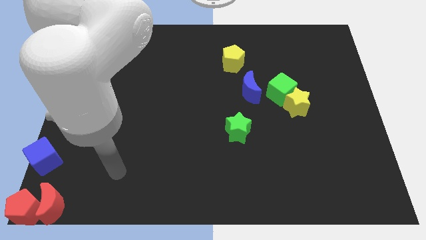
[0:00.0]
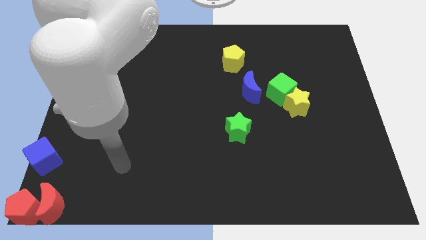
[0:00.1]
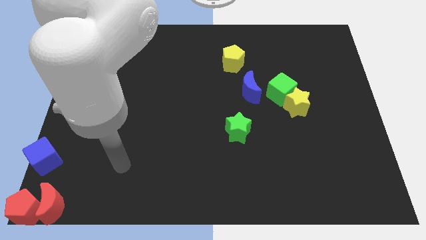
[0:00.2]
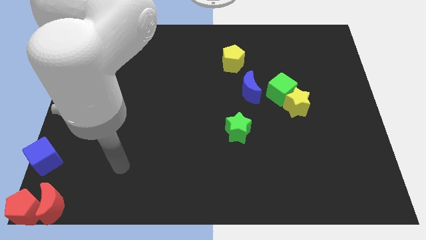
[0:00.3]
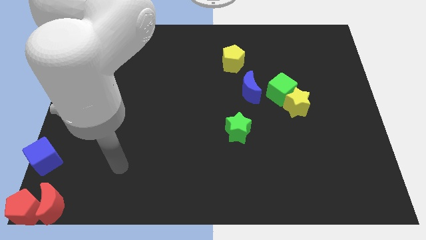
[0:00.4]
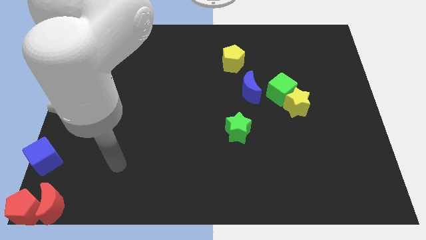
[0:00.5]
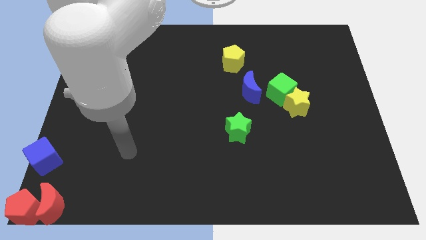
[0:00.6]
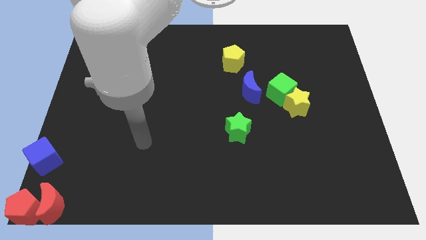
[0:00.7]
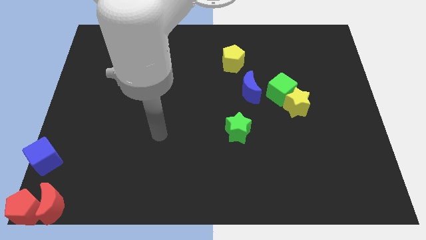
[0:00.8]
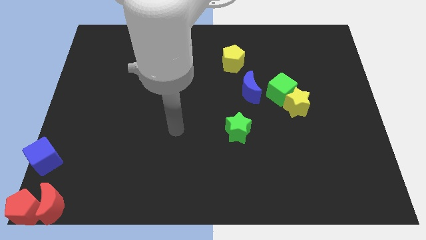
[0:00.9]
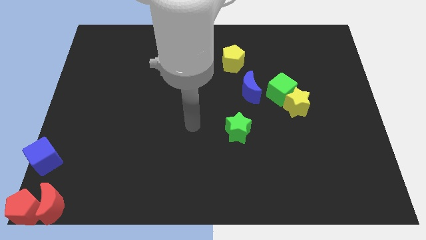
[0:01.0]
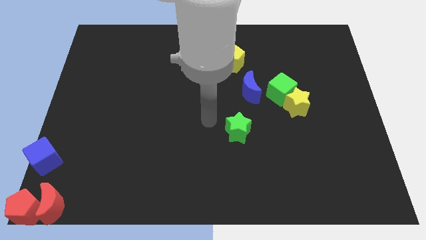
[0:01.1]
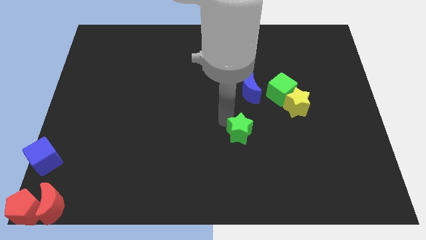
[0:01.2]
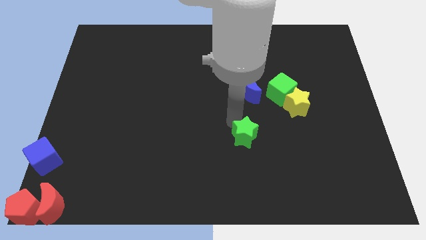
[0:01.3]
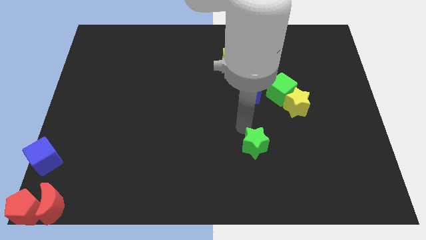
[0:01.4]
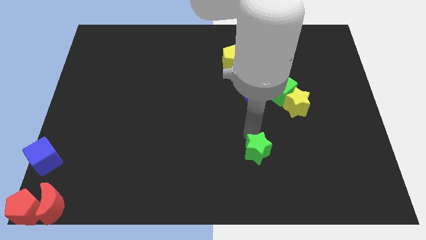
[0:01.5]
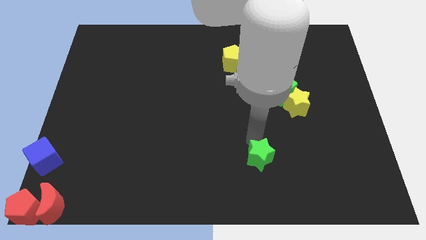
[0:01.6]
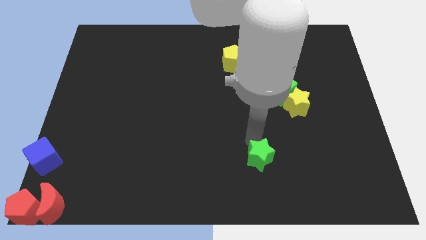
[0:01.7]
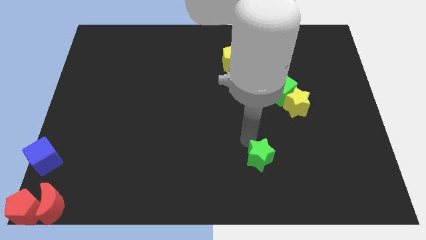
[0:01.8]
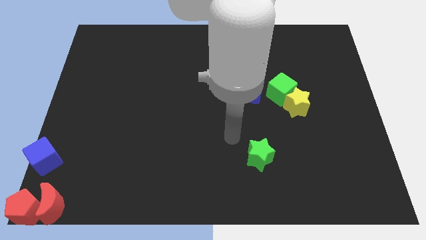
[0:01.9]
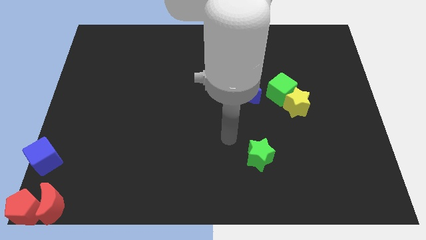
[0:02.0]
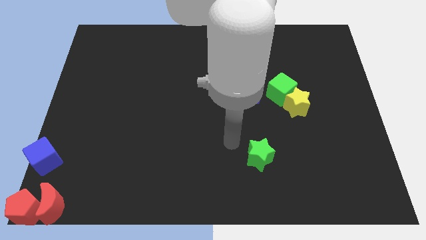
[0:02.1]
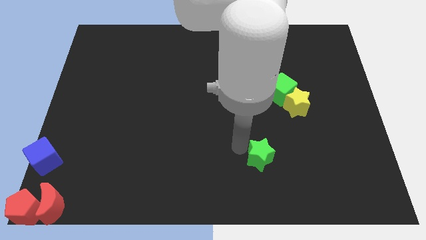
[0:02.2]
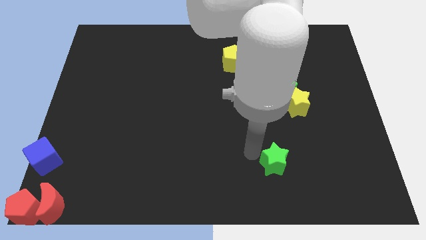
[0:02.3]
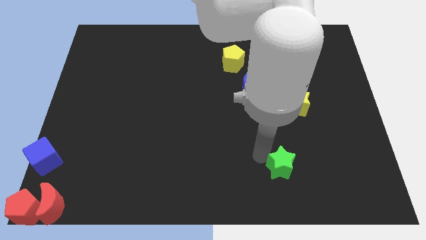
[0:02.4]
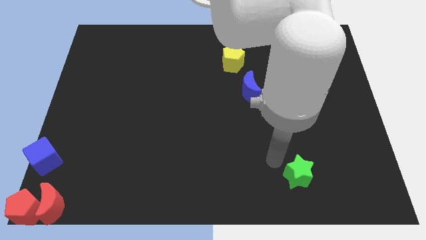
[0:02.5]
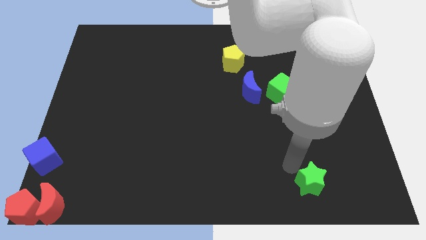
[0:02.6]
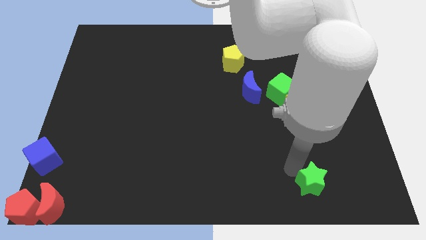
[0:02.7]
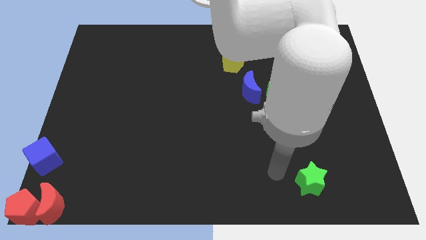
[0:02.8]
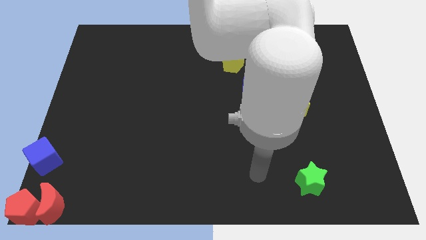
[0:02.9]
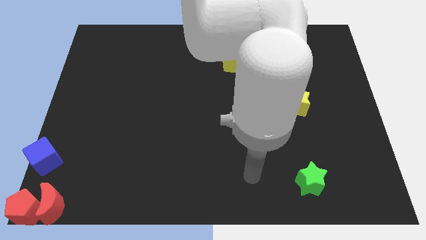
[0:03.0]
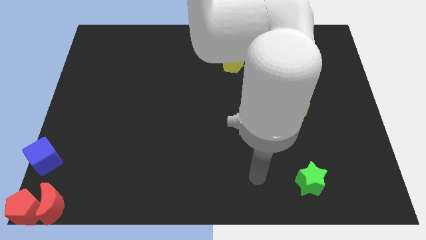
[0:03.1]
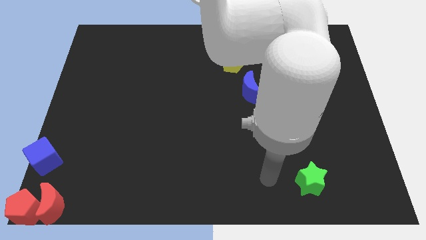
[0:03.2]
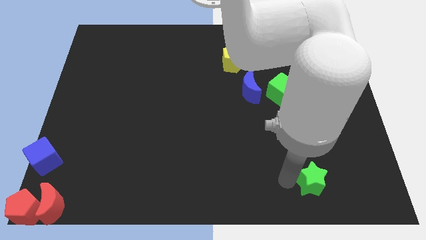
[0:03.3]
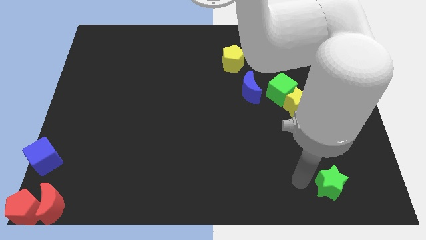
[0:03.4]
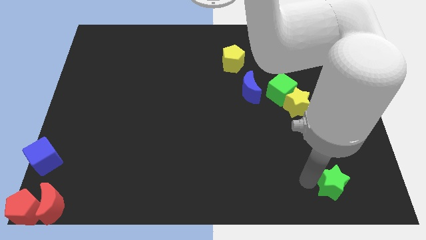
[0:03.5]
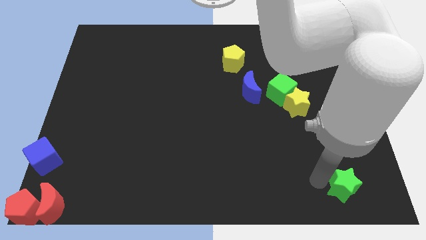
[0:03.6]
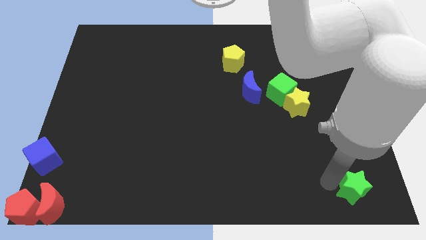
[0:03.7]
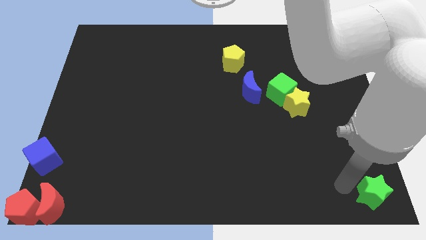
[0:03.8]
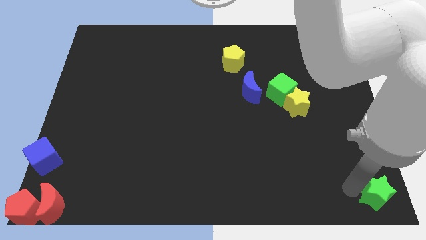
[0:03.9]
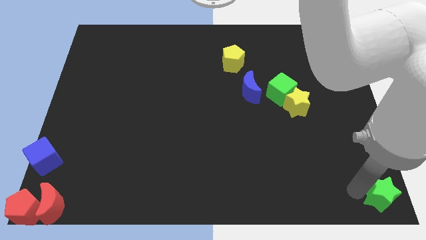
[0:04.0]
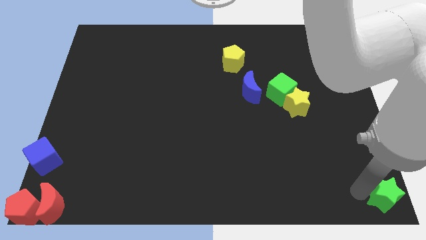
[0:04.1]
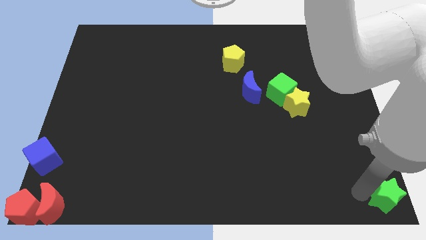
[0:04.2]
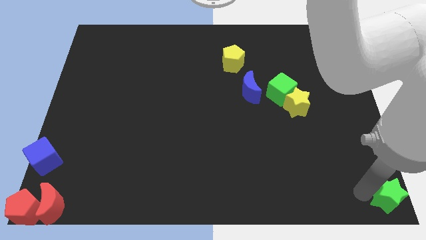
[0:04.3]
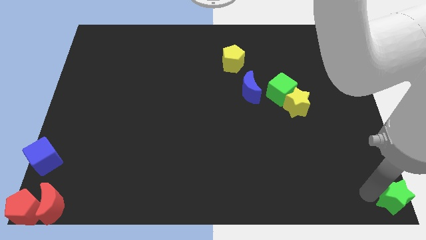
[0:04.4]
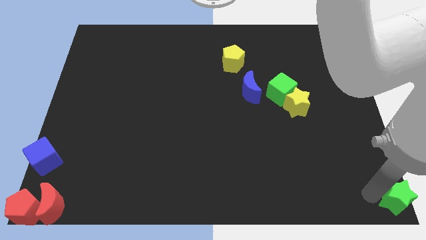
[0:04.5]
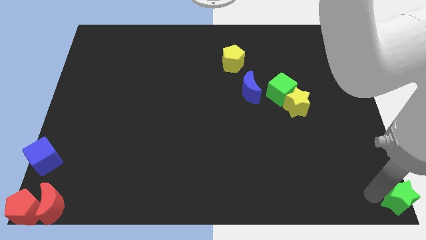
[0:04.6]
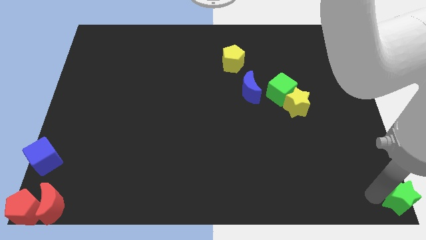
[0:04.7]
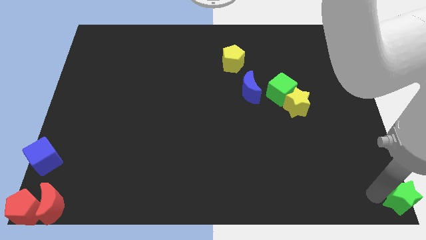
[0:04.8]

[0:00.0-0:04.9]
push the green star to the bottom right corner of the board

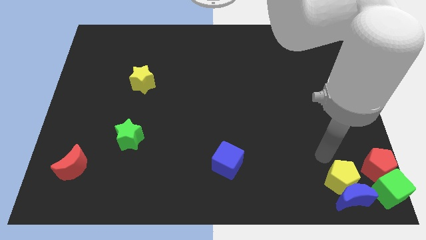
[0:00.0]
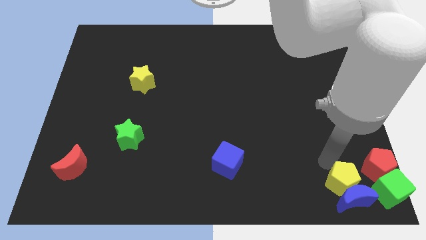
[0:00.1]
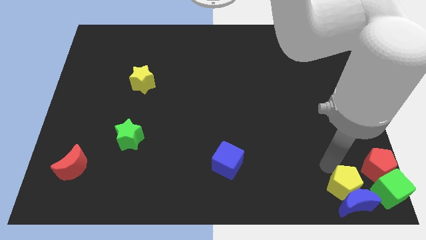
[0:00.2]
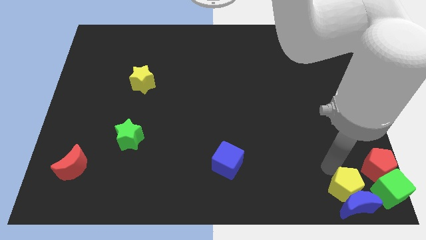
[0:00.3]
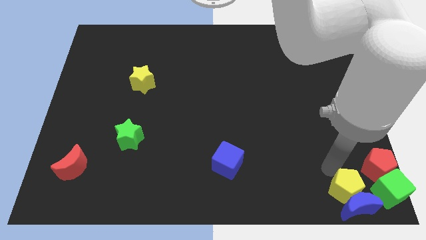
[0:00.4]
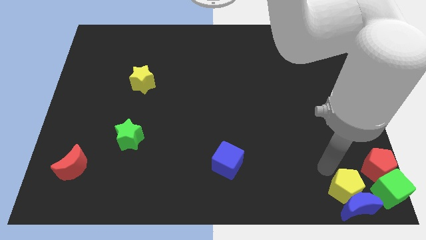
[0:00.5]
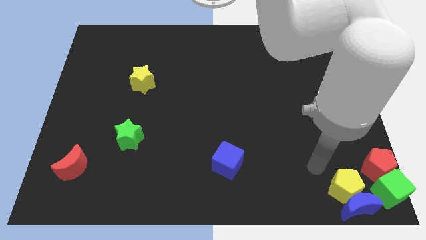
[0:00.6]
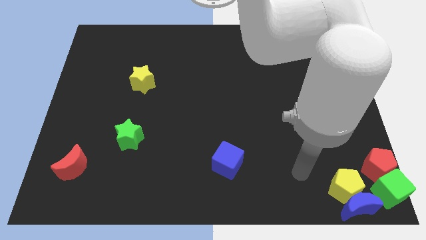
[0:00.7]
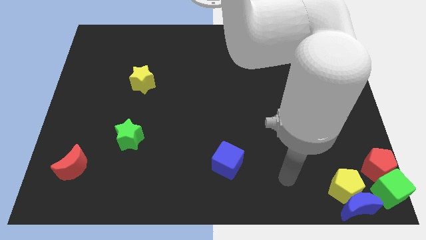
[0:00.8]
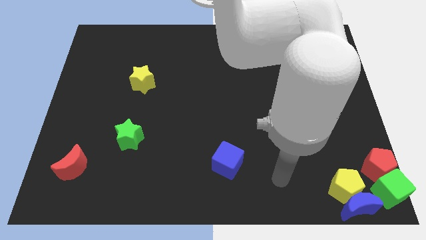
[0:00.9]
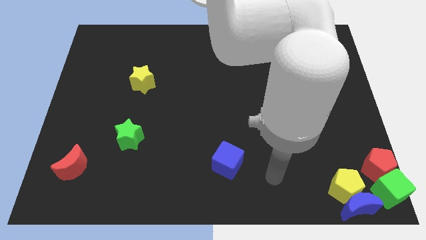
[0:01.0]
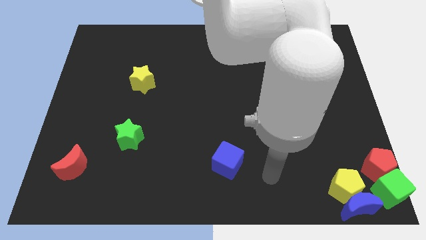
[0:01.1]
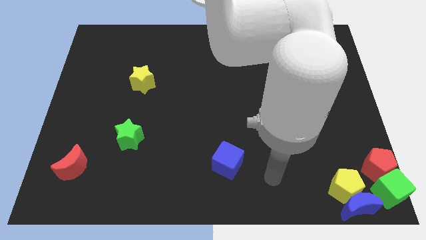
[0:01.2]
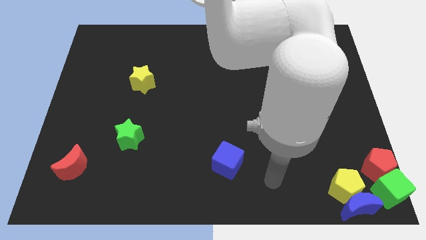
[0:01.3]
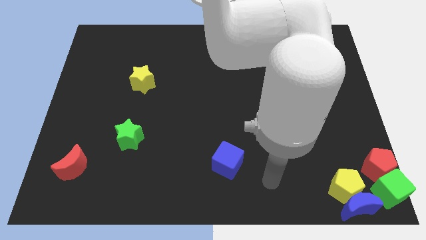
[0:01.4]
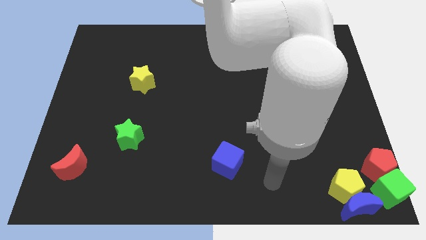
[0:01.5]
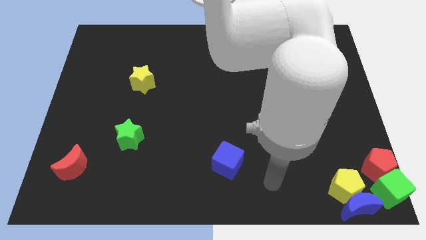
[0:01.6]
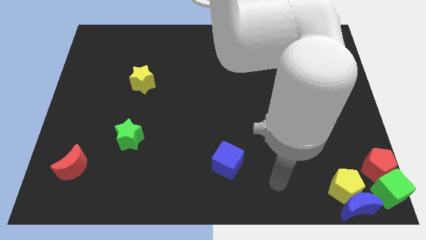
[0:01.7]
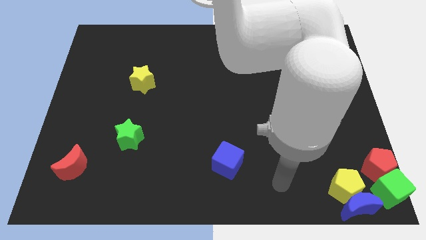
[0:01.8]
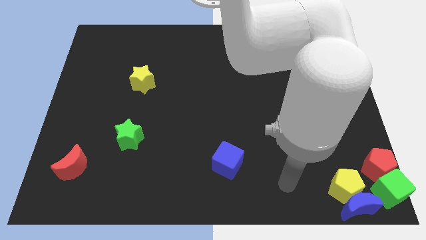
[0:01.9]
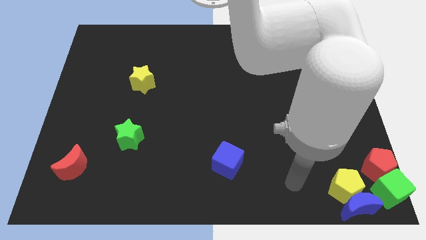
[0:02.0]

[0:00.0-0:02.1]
place your arm left of the yellow pentagon

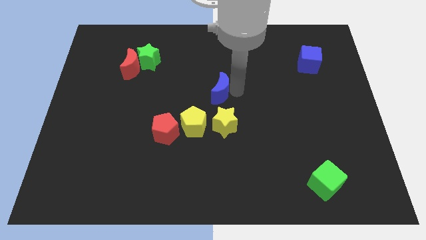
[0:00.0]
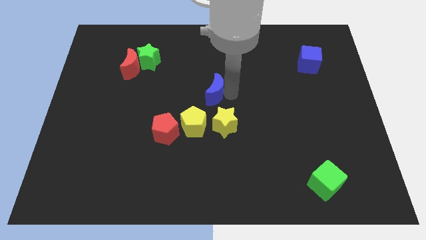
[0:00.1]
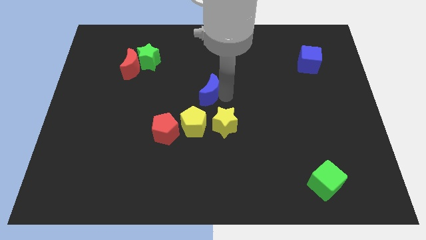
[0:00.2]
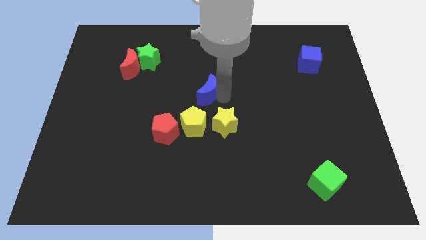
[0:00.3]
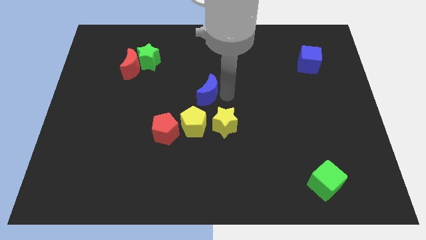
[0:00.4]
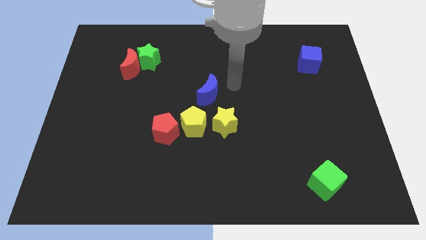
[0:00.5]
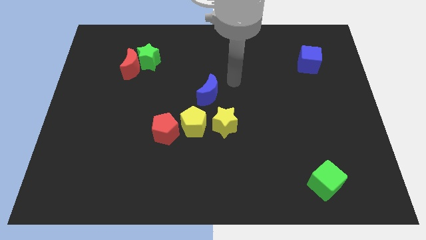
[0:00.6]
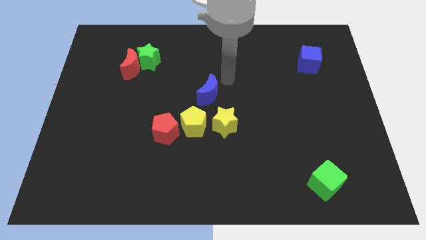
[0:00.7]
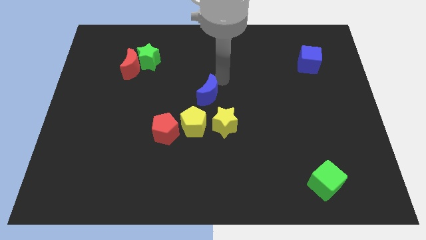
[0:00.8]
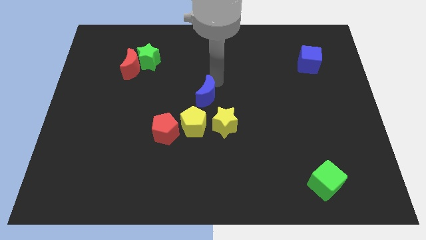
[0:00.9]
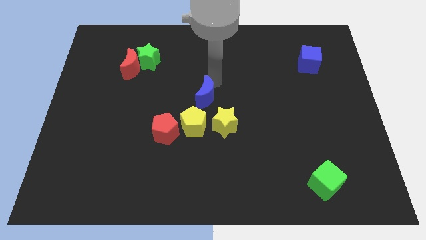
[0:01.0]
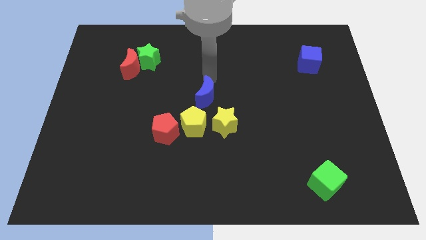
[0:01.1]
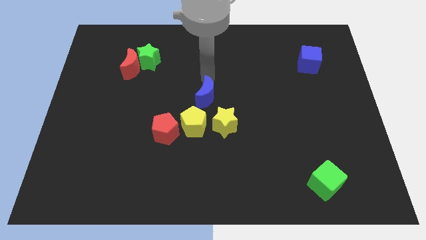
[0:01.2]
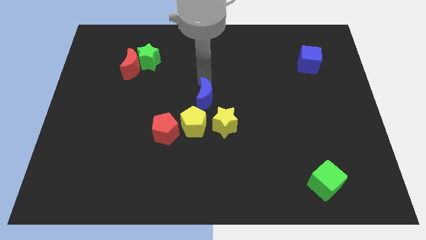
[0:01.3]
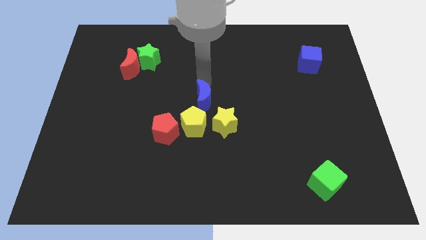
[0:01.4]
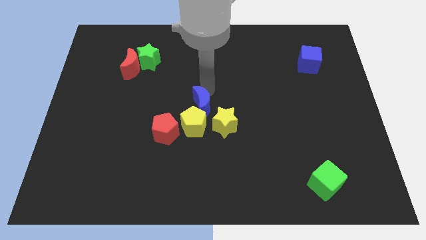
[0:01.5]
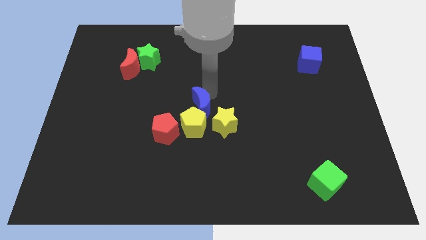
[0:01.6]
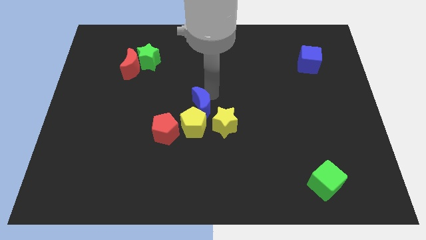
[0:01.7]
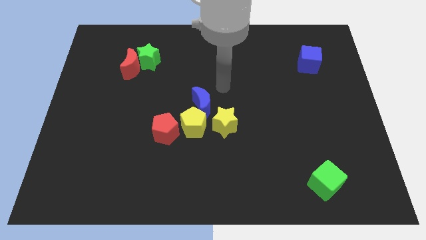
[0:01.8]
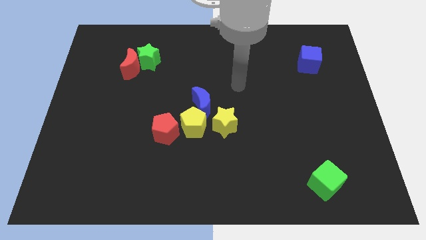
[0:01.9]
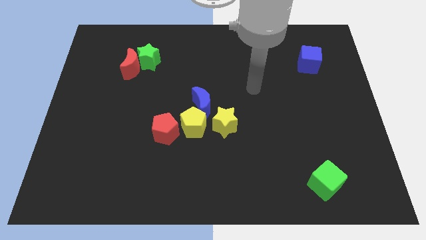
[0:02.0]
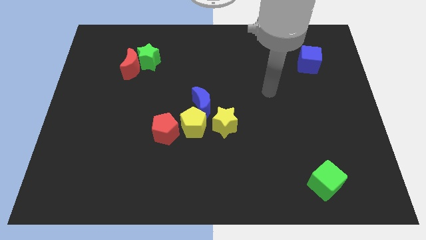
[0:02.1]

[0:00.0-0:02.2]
move blue crescent to the top of the yellow pentagon
